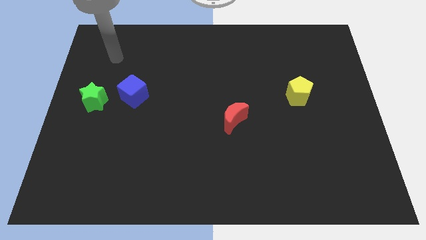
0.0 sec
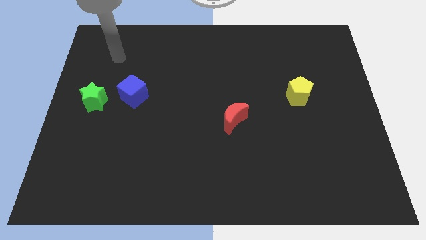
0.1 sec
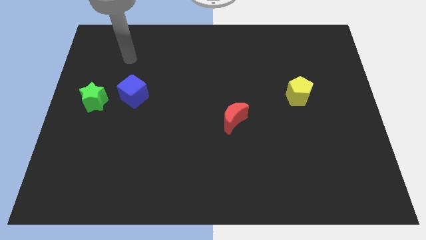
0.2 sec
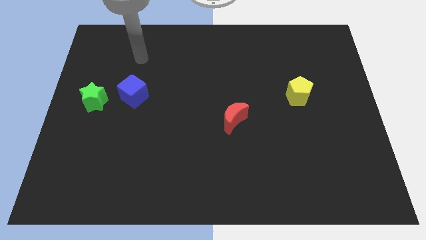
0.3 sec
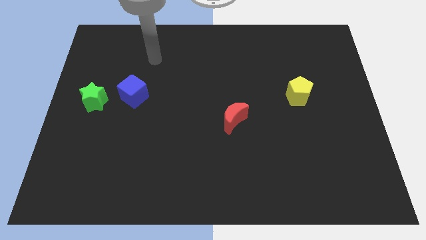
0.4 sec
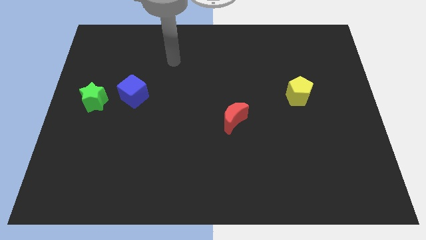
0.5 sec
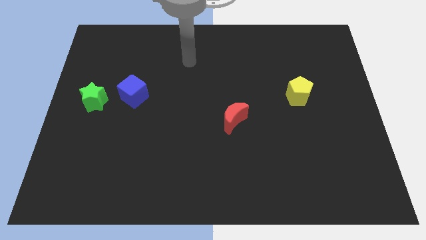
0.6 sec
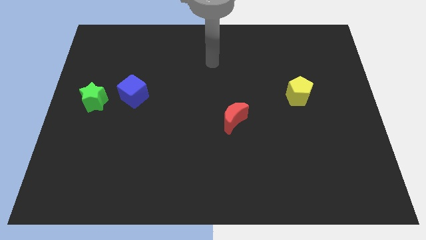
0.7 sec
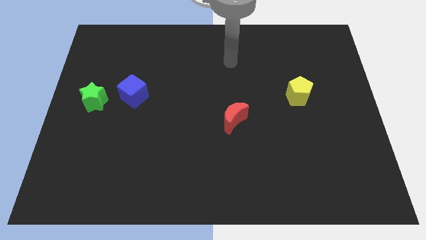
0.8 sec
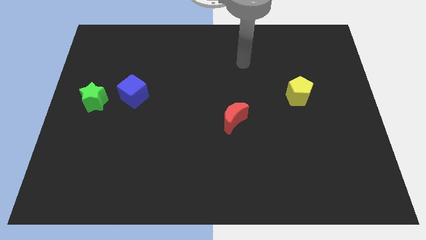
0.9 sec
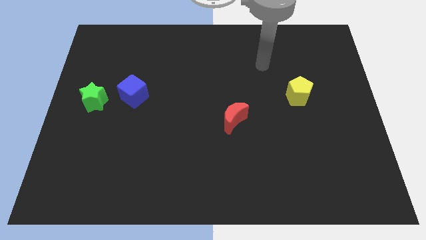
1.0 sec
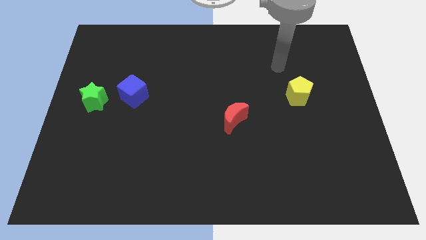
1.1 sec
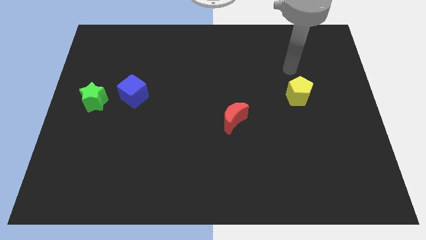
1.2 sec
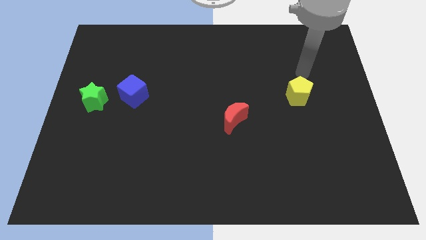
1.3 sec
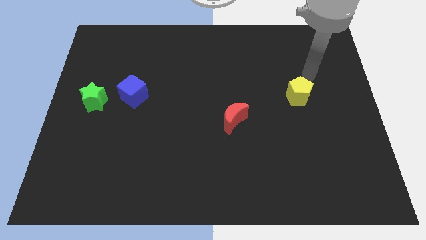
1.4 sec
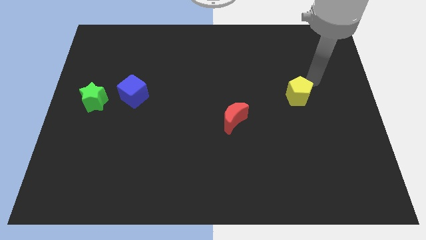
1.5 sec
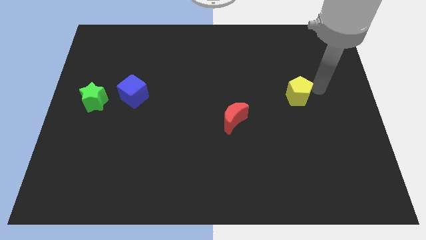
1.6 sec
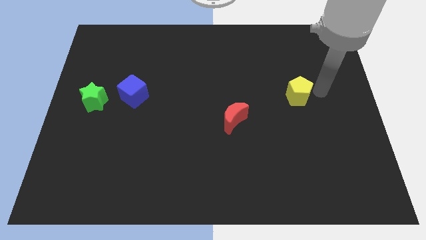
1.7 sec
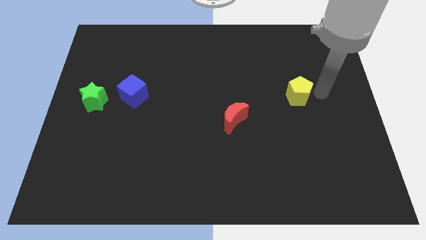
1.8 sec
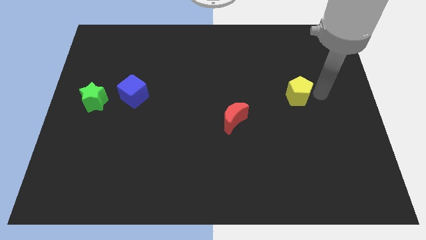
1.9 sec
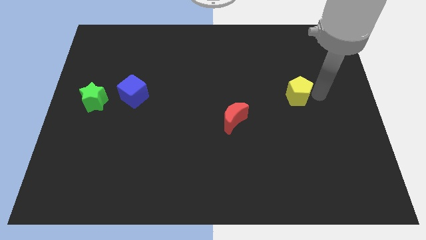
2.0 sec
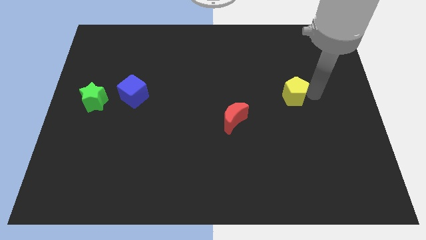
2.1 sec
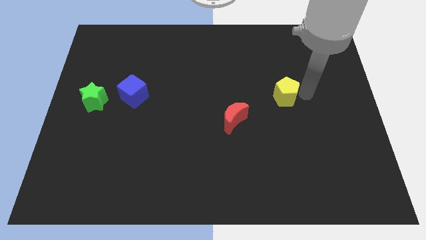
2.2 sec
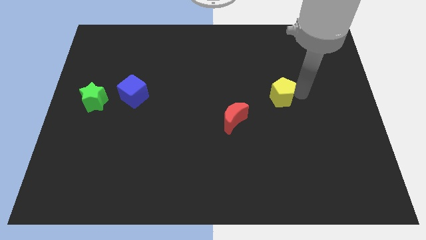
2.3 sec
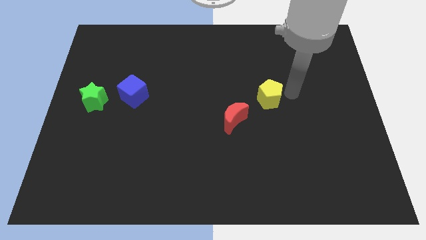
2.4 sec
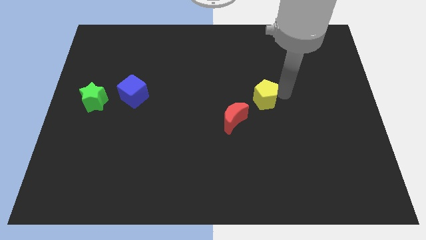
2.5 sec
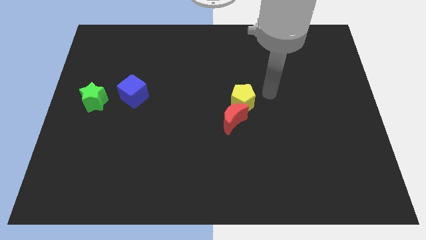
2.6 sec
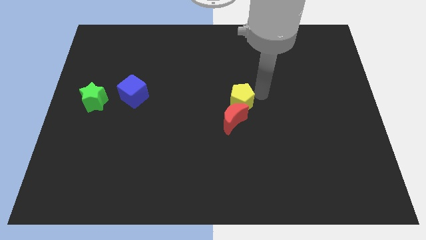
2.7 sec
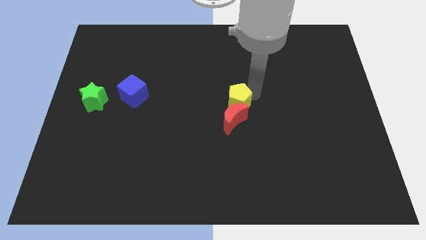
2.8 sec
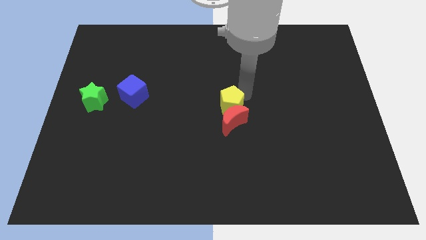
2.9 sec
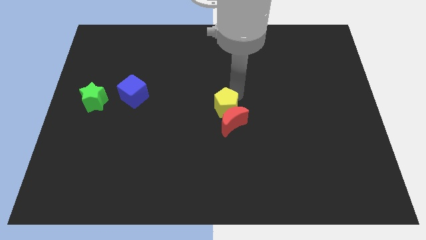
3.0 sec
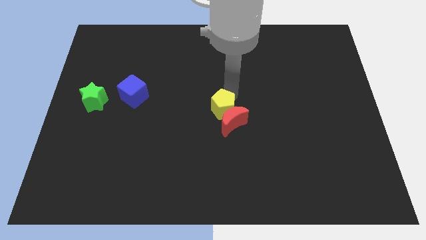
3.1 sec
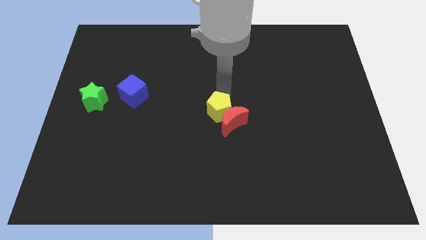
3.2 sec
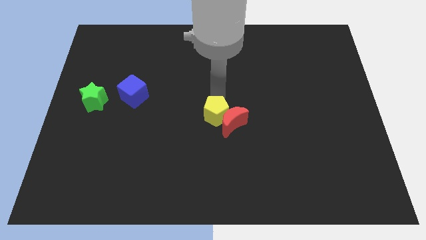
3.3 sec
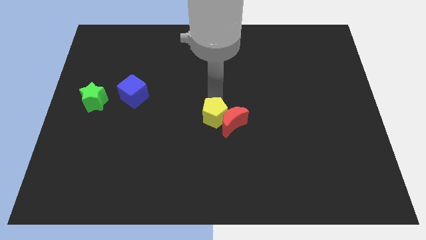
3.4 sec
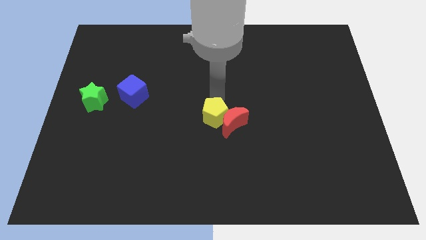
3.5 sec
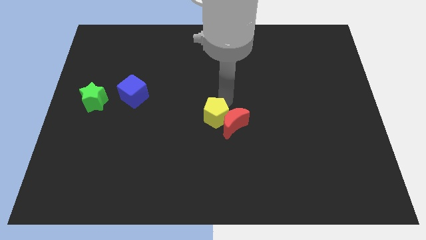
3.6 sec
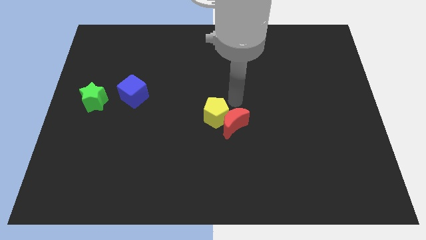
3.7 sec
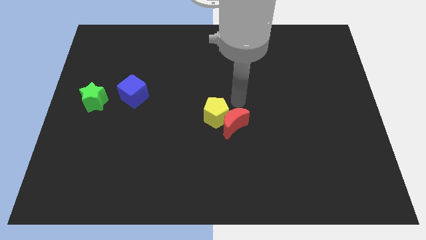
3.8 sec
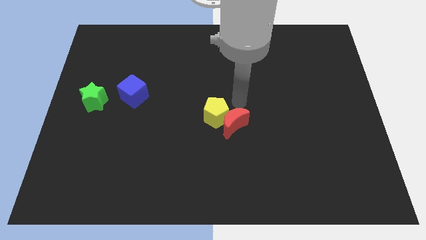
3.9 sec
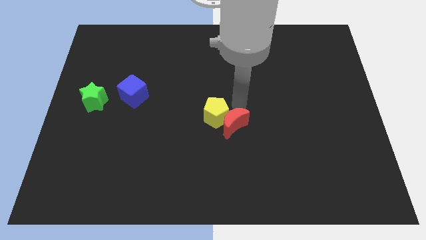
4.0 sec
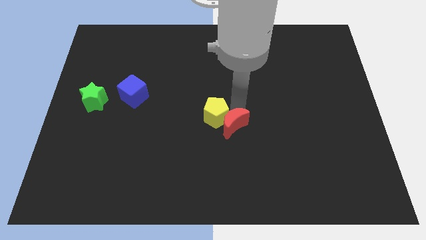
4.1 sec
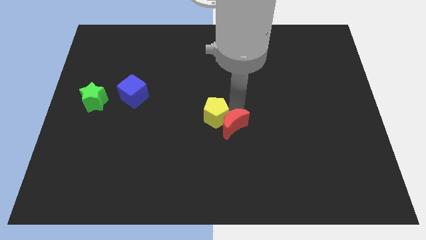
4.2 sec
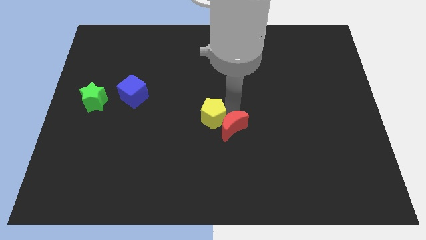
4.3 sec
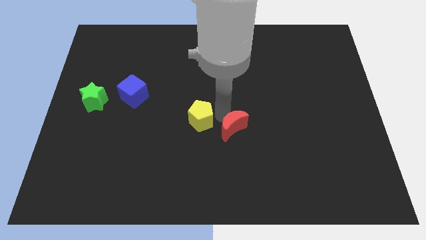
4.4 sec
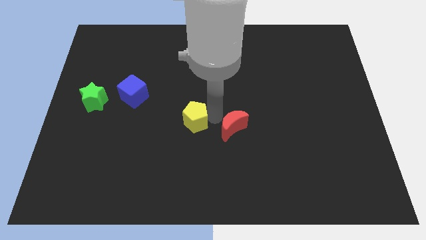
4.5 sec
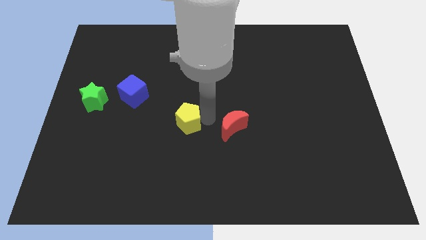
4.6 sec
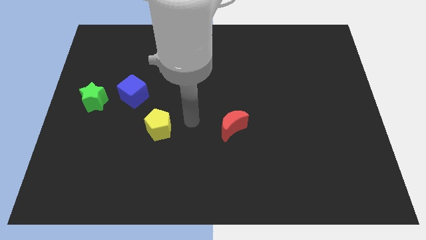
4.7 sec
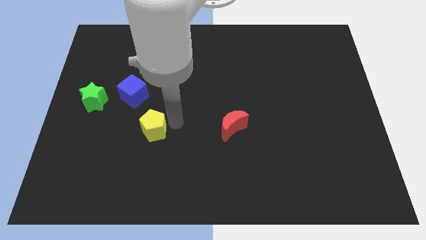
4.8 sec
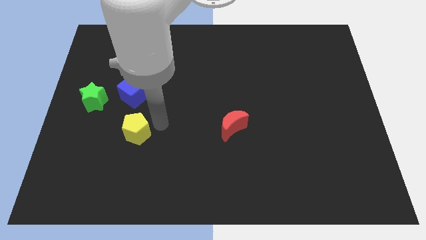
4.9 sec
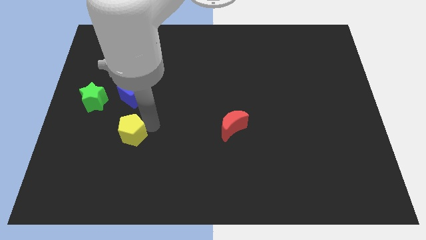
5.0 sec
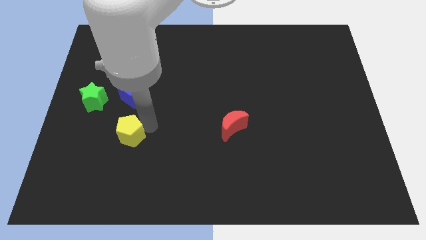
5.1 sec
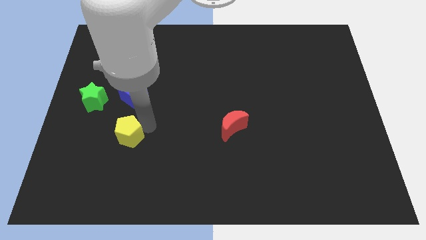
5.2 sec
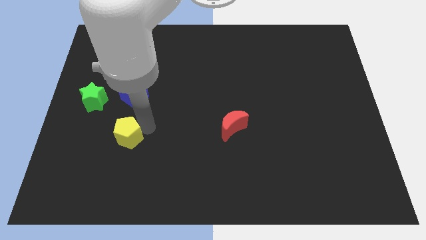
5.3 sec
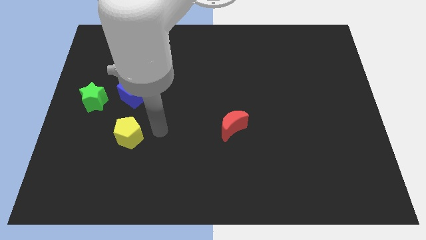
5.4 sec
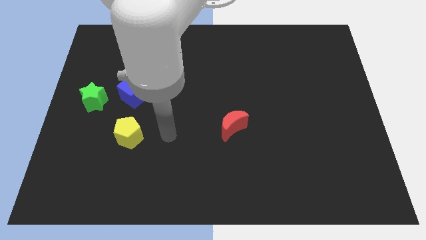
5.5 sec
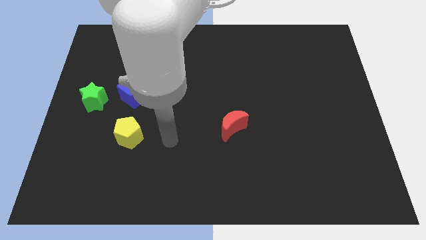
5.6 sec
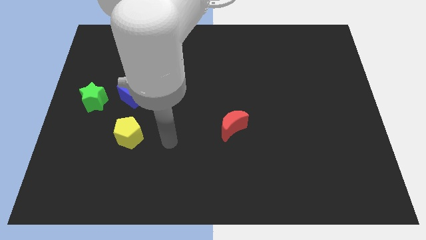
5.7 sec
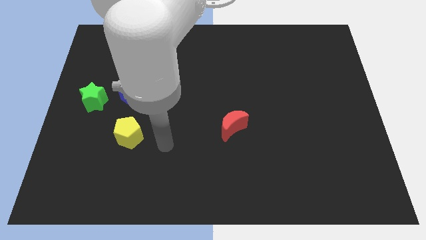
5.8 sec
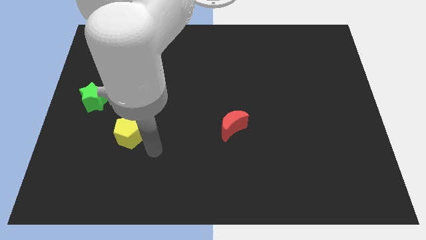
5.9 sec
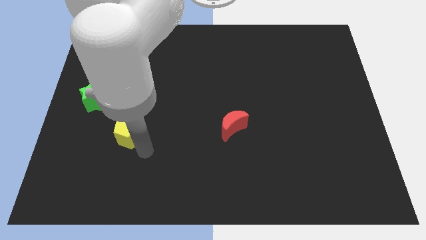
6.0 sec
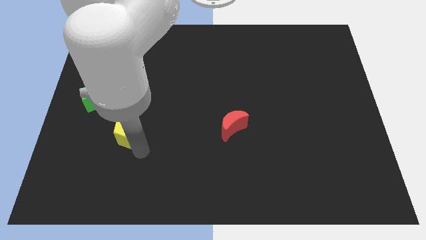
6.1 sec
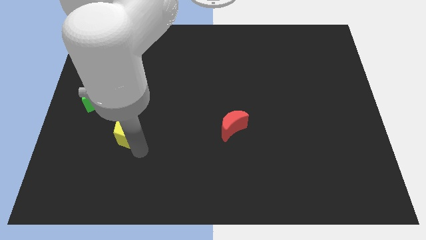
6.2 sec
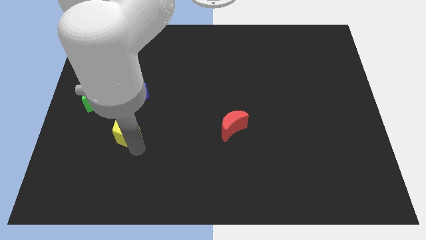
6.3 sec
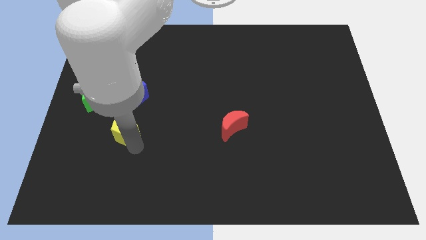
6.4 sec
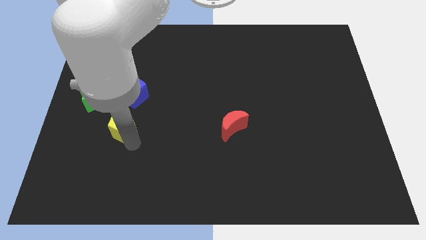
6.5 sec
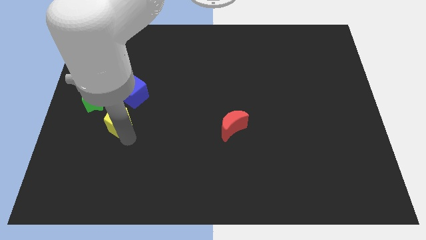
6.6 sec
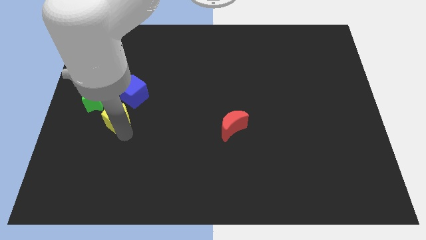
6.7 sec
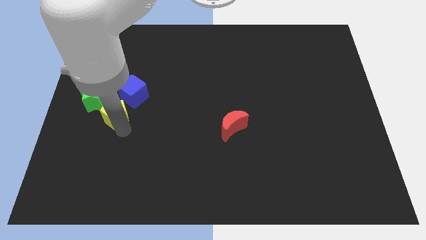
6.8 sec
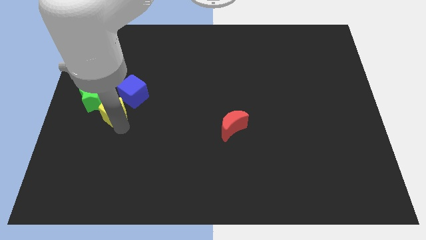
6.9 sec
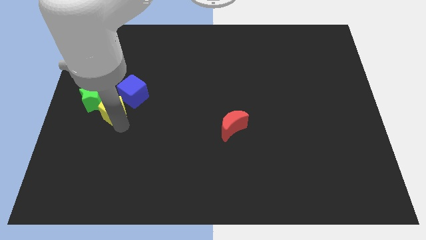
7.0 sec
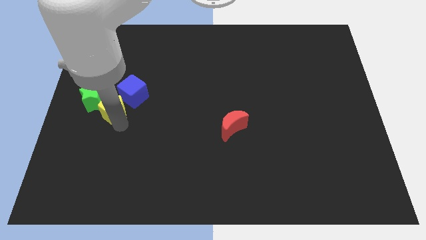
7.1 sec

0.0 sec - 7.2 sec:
put the yellow pentagon close to the green block

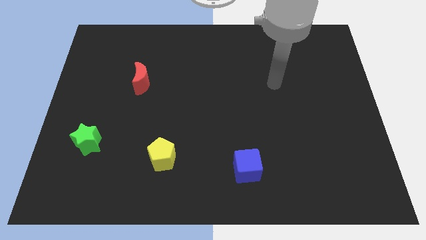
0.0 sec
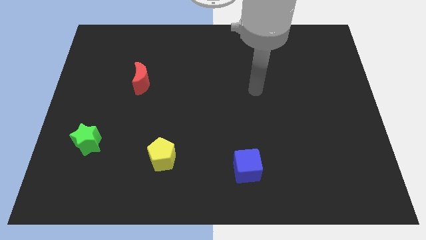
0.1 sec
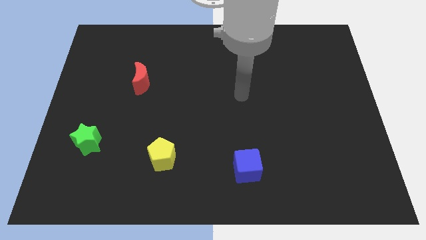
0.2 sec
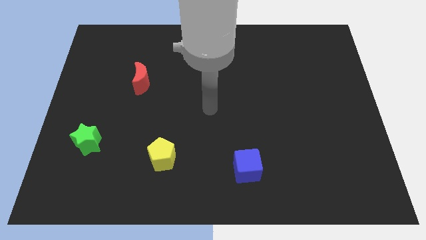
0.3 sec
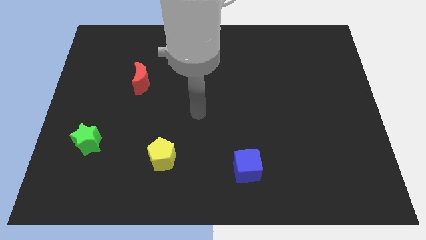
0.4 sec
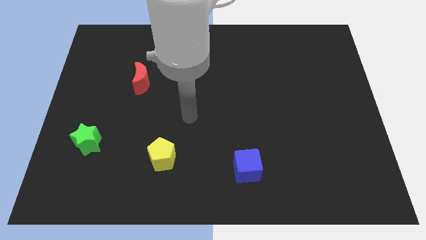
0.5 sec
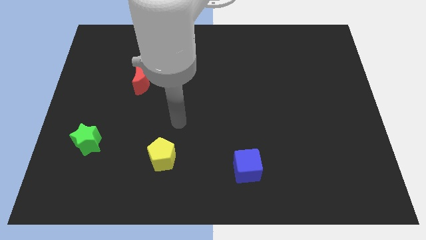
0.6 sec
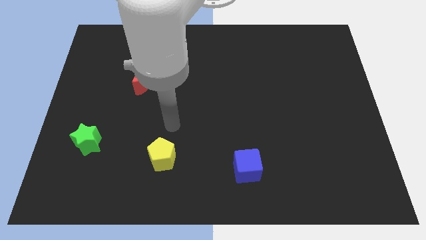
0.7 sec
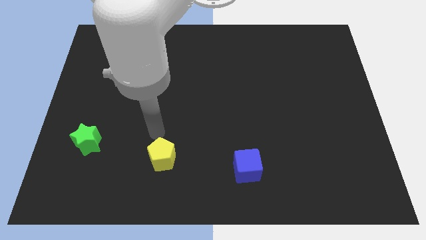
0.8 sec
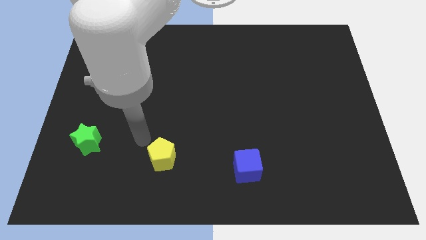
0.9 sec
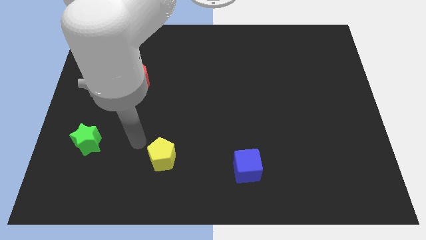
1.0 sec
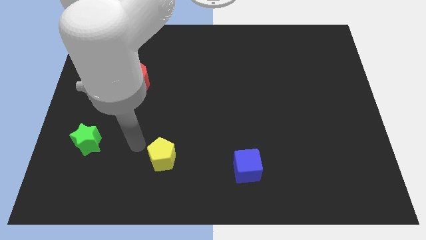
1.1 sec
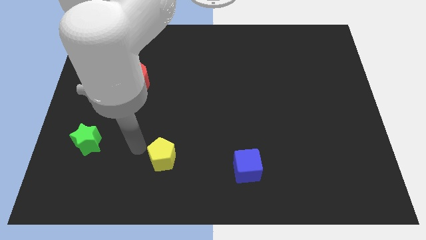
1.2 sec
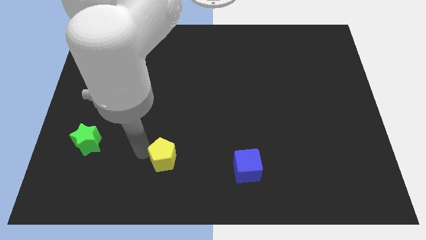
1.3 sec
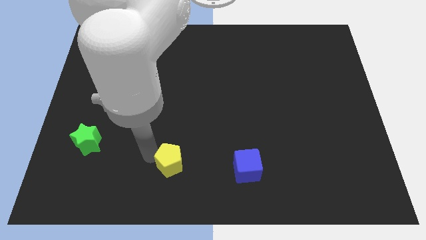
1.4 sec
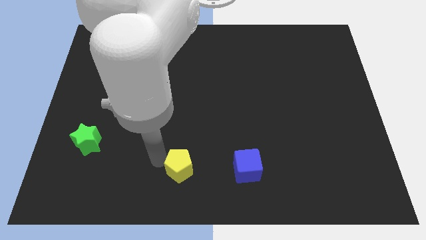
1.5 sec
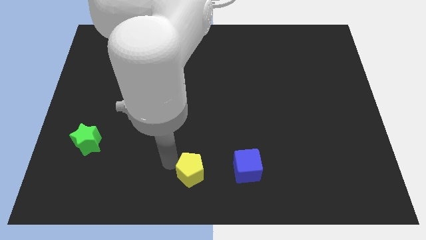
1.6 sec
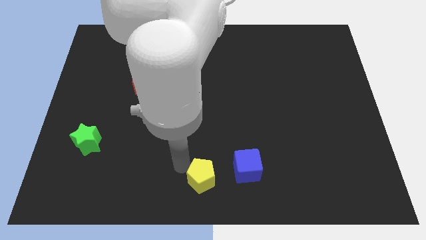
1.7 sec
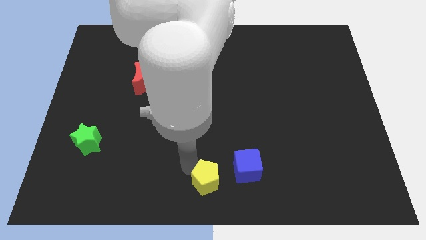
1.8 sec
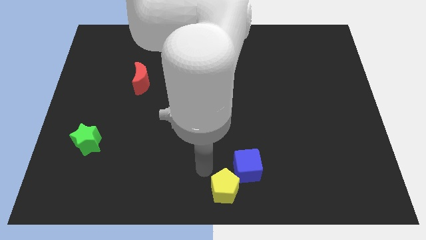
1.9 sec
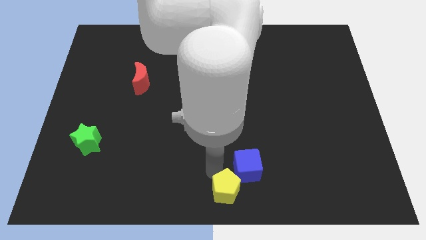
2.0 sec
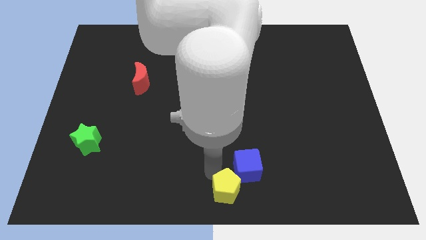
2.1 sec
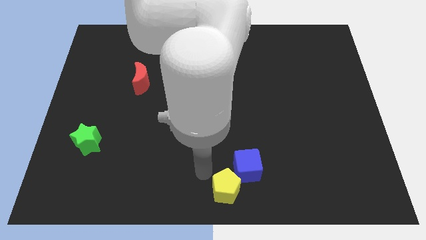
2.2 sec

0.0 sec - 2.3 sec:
move the pentagon next to the blue cube
